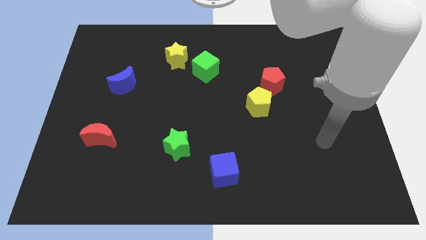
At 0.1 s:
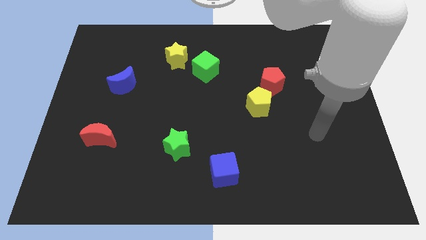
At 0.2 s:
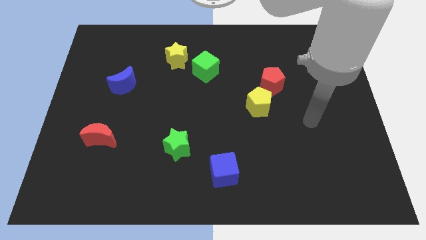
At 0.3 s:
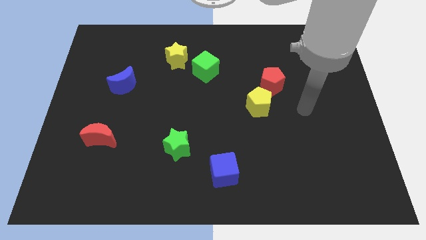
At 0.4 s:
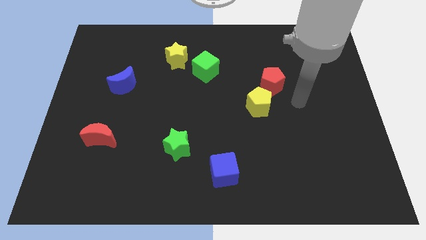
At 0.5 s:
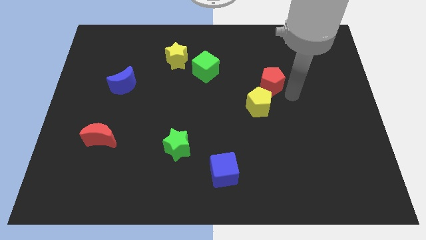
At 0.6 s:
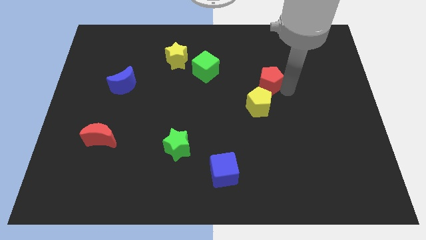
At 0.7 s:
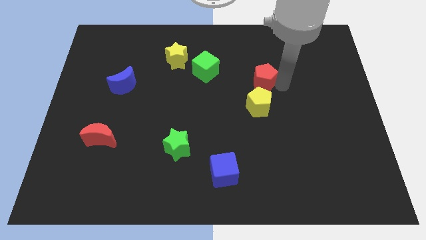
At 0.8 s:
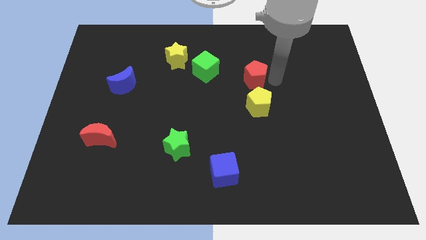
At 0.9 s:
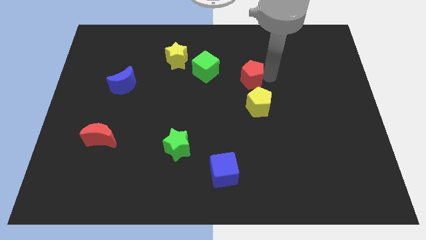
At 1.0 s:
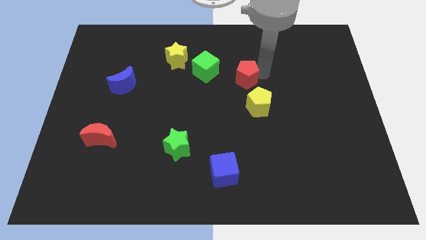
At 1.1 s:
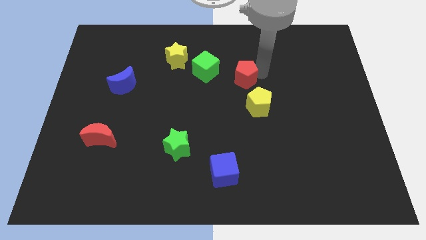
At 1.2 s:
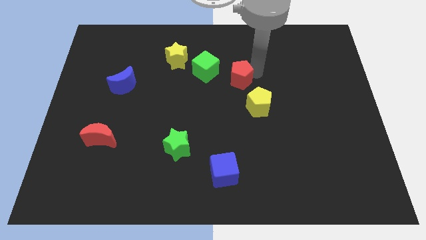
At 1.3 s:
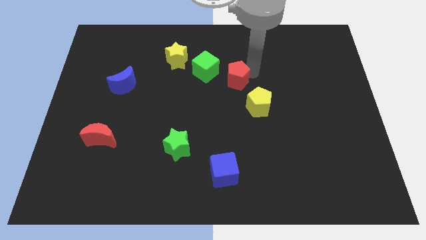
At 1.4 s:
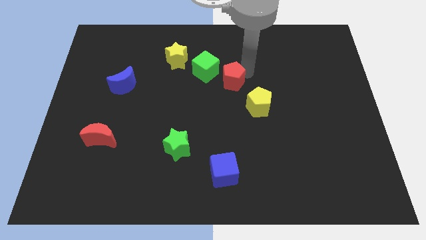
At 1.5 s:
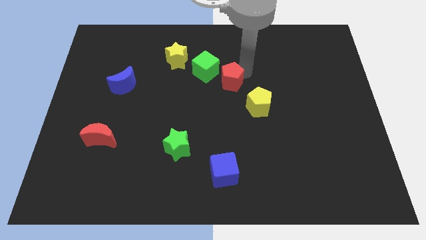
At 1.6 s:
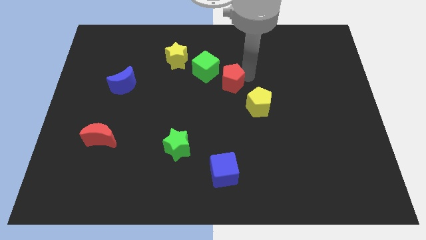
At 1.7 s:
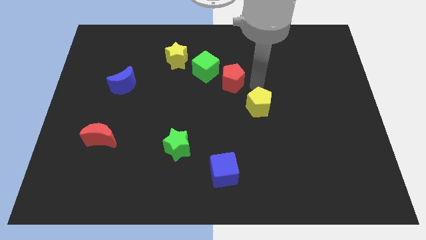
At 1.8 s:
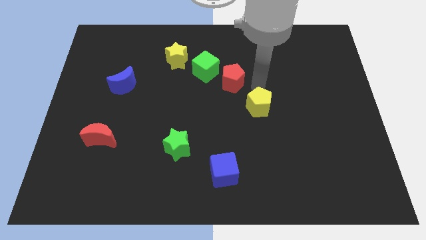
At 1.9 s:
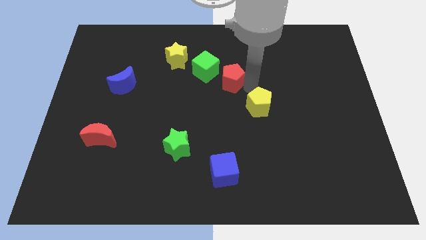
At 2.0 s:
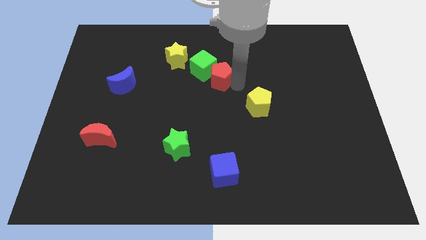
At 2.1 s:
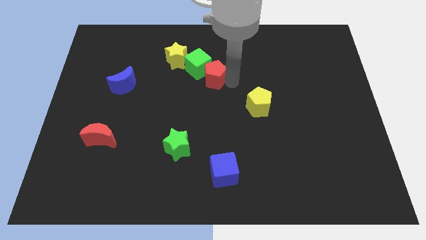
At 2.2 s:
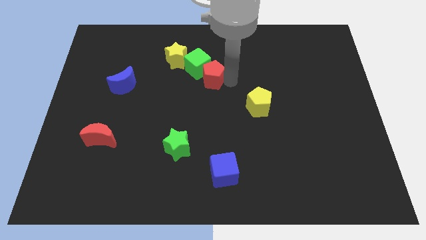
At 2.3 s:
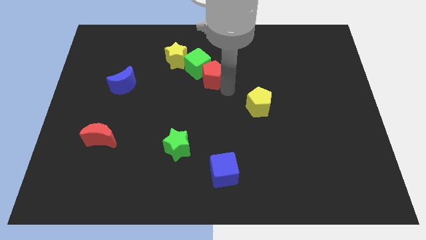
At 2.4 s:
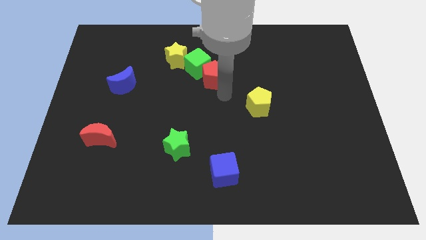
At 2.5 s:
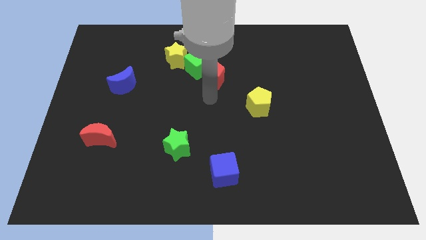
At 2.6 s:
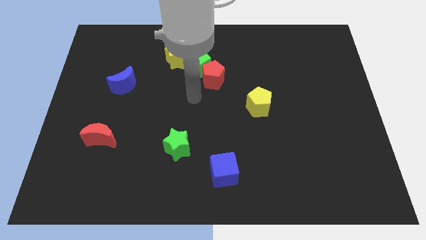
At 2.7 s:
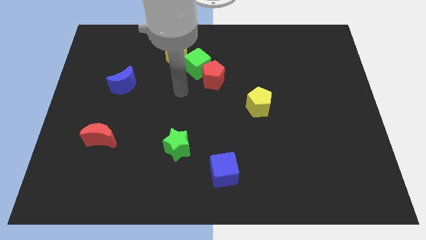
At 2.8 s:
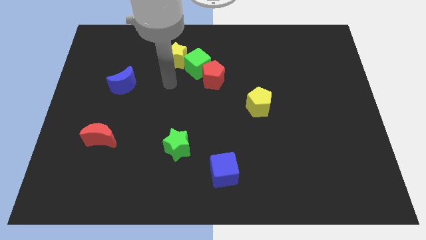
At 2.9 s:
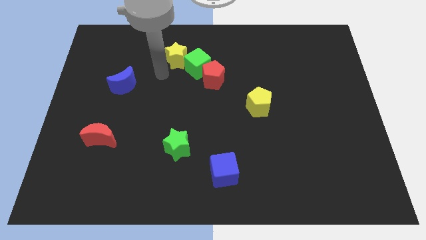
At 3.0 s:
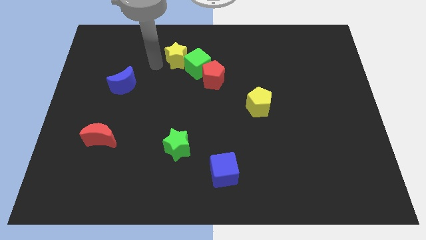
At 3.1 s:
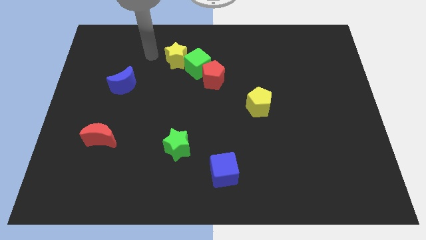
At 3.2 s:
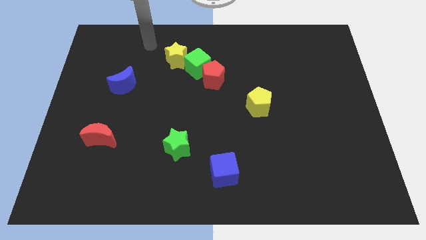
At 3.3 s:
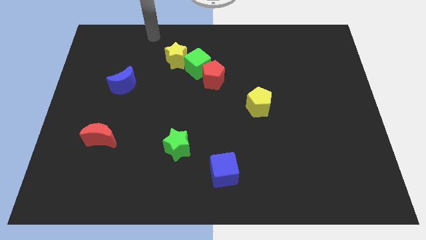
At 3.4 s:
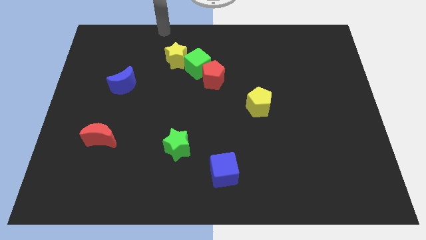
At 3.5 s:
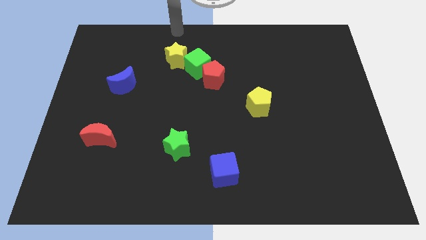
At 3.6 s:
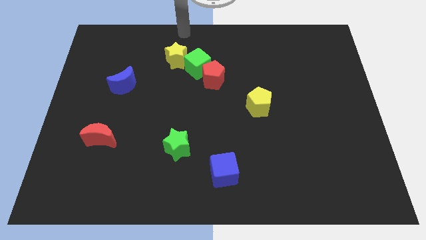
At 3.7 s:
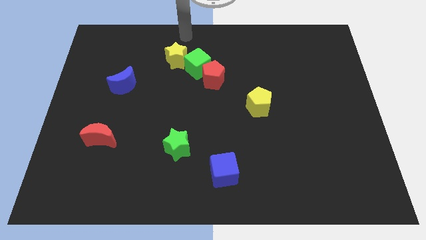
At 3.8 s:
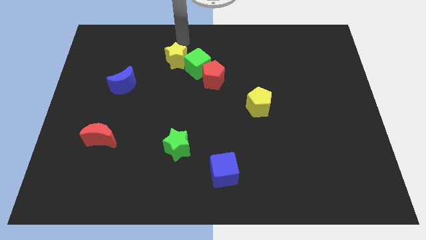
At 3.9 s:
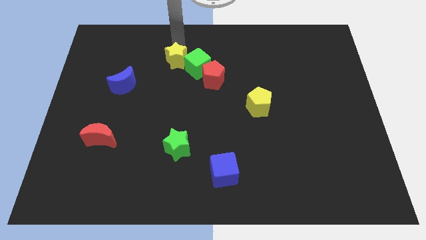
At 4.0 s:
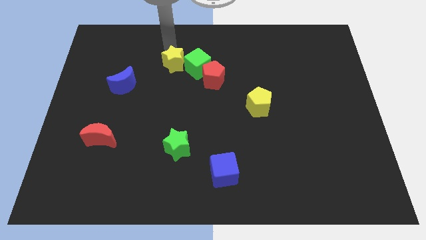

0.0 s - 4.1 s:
place the red pentagon near the green cube

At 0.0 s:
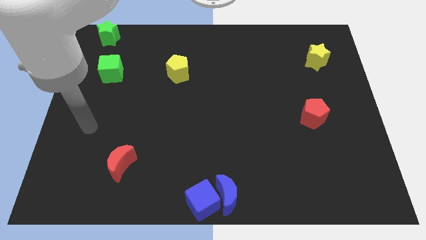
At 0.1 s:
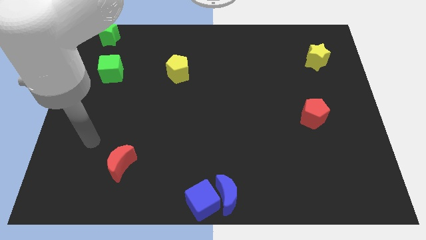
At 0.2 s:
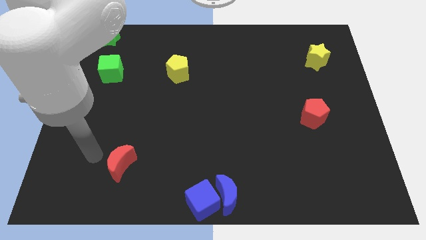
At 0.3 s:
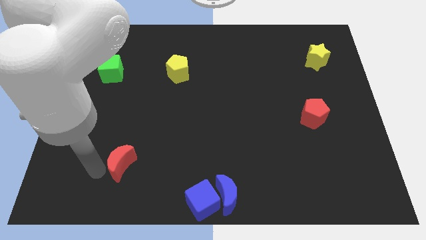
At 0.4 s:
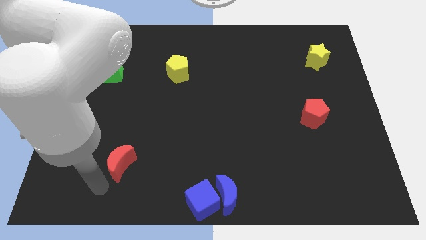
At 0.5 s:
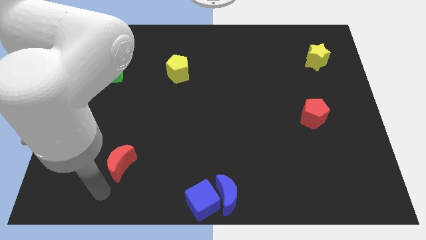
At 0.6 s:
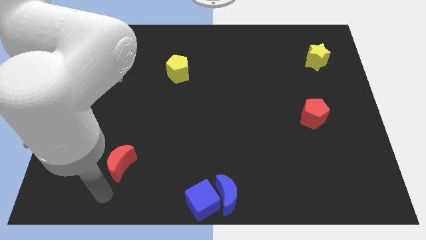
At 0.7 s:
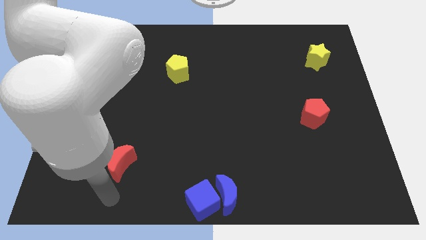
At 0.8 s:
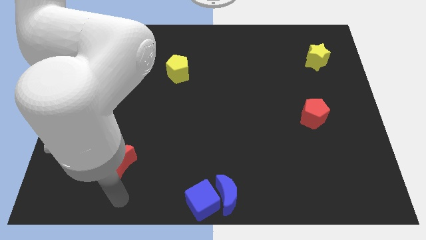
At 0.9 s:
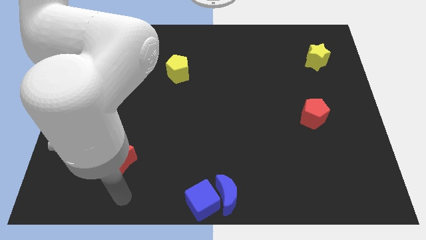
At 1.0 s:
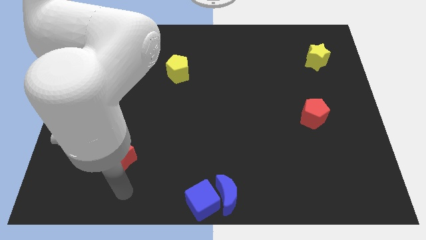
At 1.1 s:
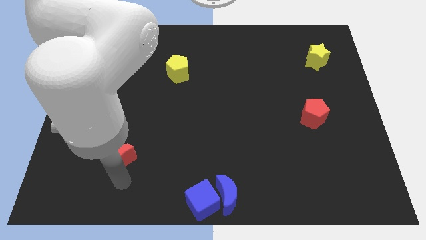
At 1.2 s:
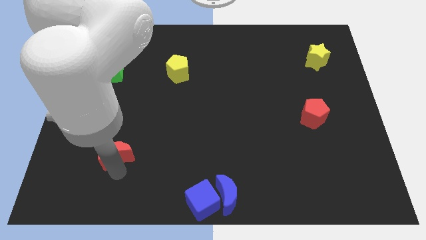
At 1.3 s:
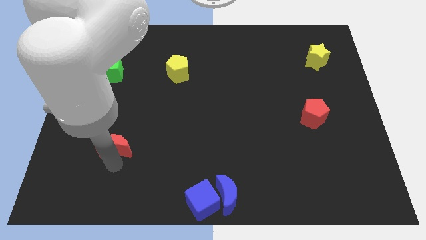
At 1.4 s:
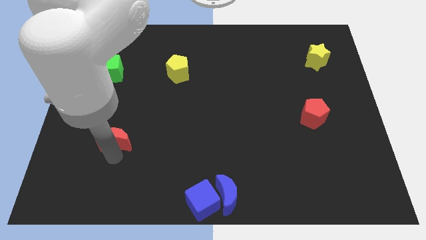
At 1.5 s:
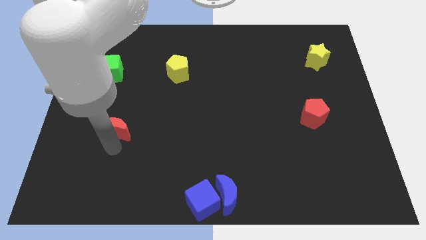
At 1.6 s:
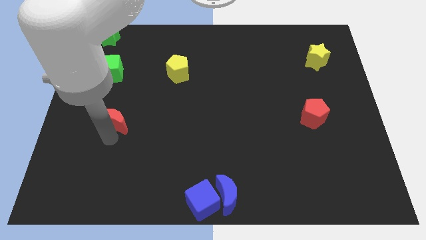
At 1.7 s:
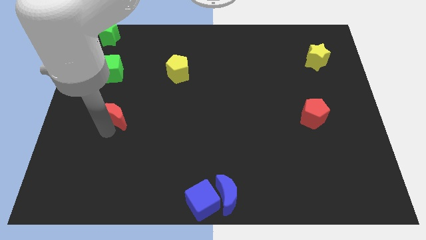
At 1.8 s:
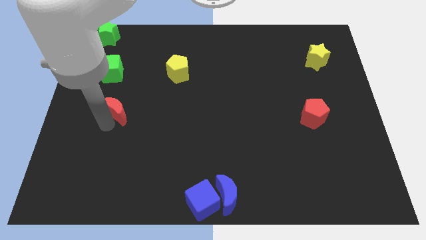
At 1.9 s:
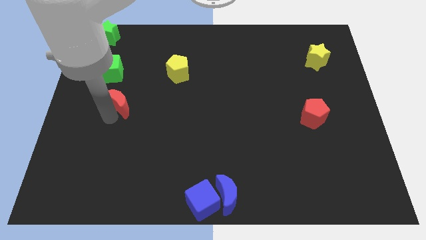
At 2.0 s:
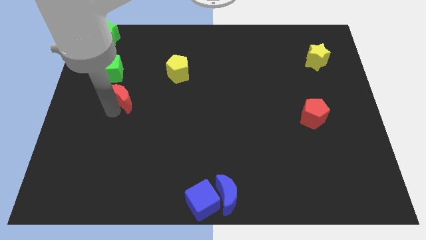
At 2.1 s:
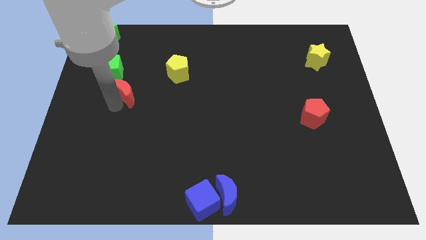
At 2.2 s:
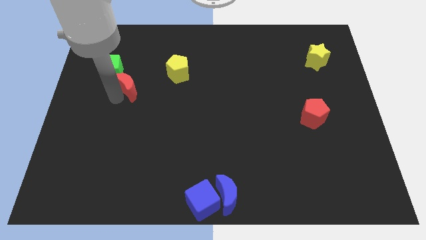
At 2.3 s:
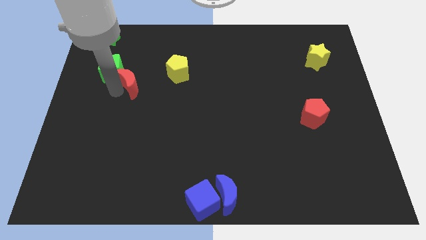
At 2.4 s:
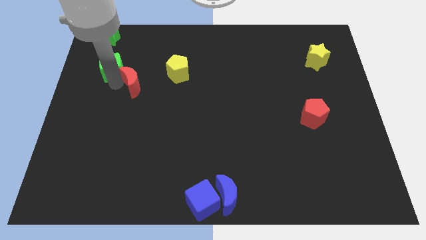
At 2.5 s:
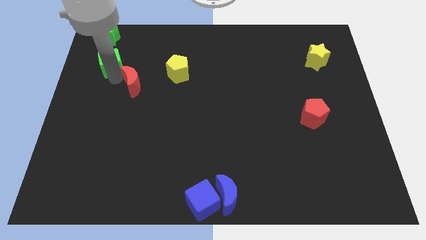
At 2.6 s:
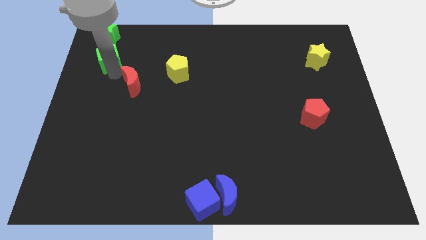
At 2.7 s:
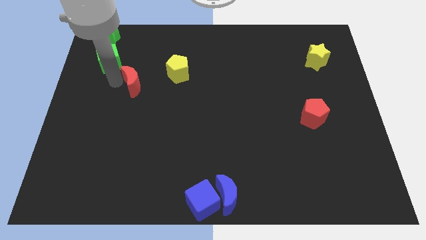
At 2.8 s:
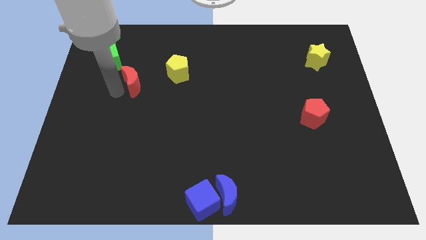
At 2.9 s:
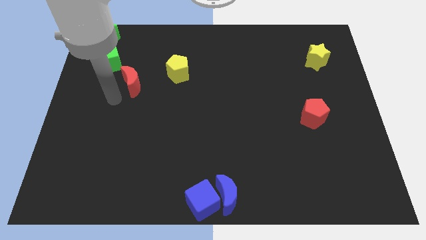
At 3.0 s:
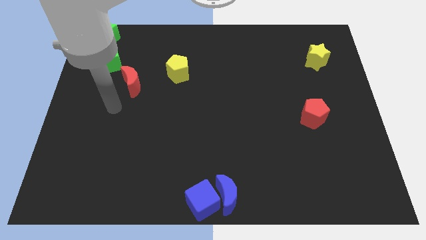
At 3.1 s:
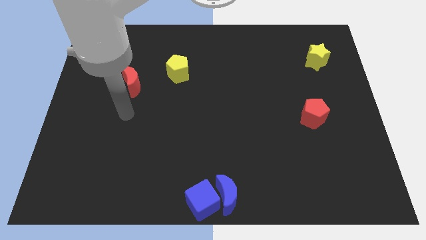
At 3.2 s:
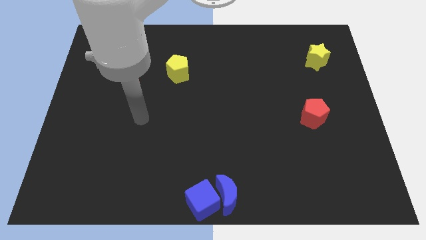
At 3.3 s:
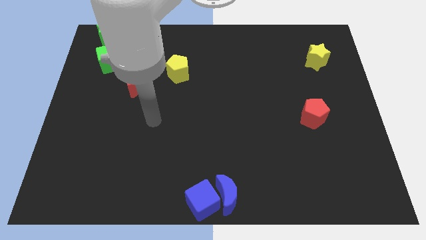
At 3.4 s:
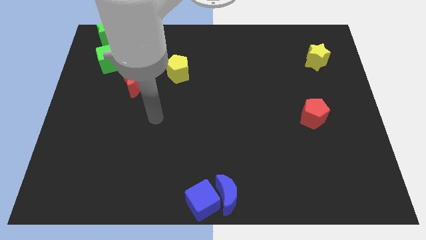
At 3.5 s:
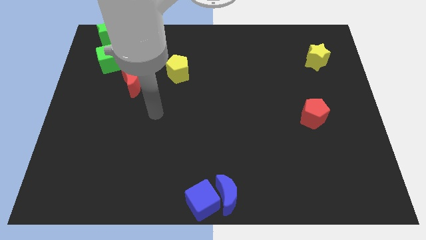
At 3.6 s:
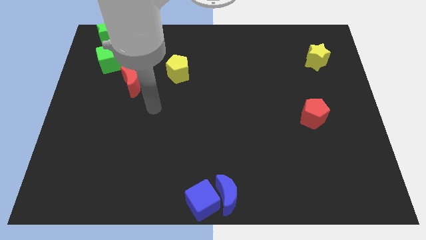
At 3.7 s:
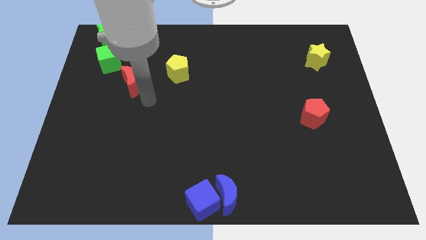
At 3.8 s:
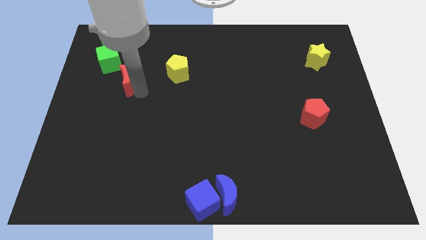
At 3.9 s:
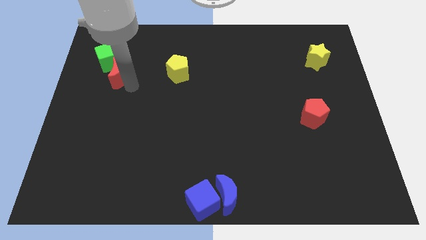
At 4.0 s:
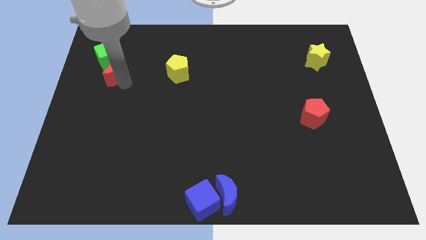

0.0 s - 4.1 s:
push red moon into green cube

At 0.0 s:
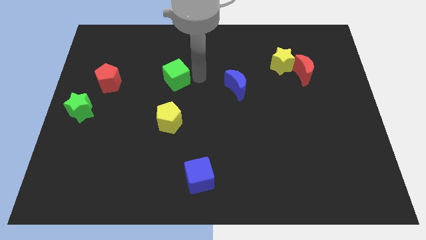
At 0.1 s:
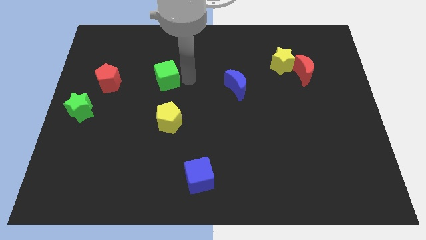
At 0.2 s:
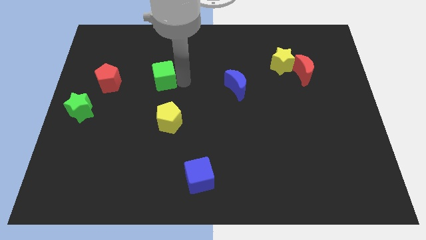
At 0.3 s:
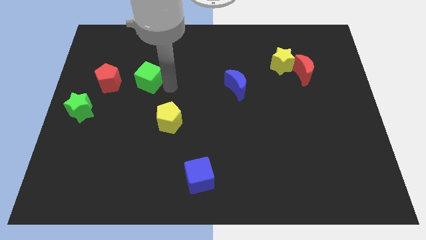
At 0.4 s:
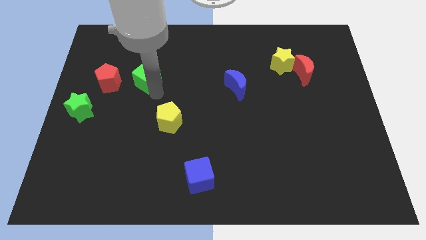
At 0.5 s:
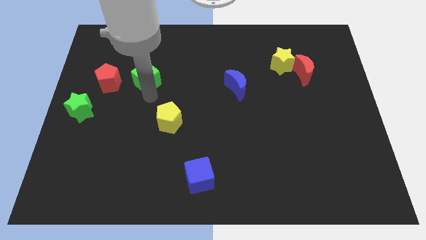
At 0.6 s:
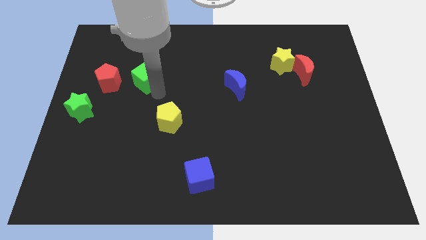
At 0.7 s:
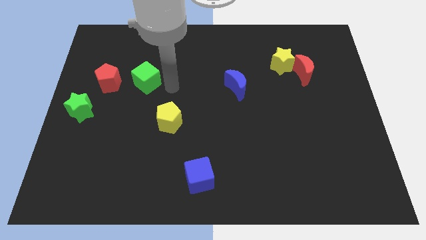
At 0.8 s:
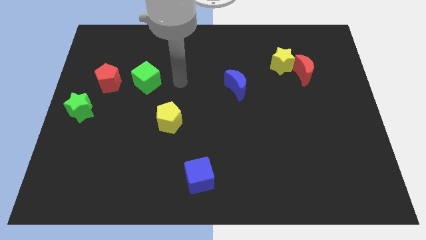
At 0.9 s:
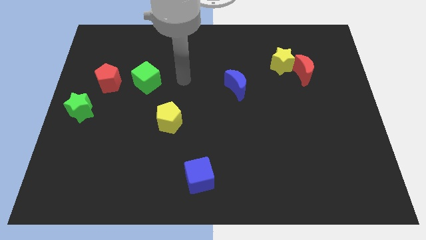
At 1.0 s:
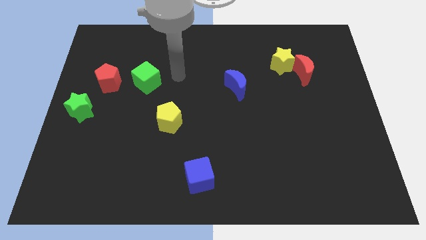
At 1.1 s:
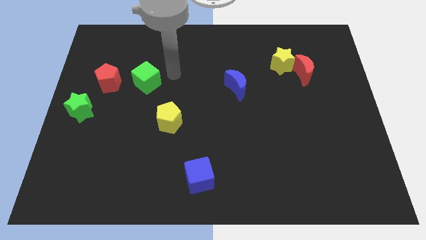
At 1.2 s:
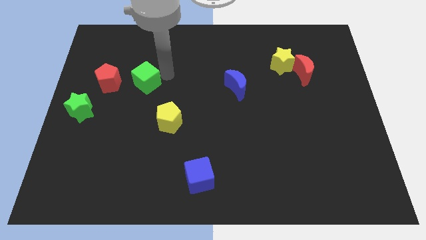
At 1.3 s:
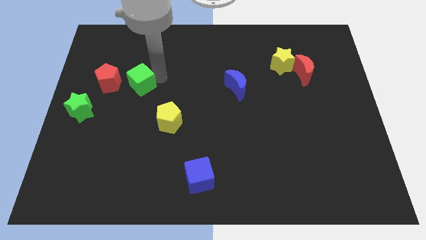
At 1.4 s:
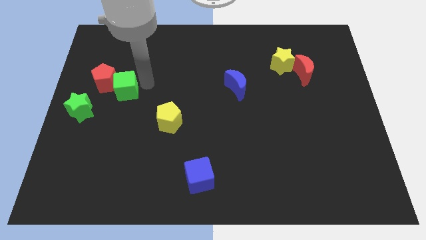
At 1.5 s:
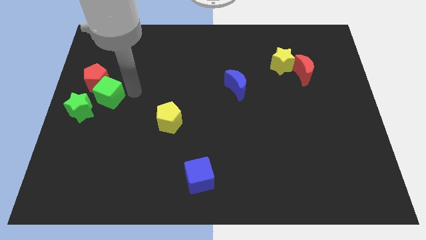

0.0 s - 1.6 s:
slide the green cube into the red pentagon
